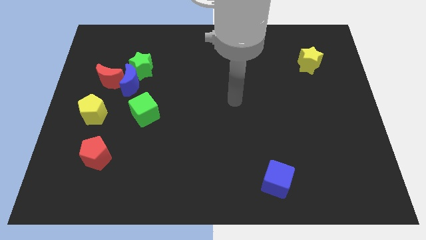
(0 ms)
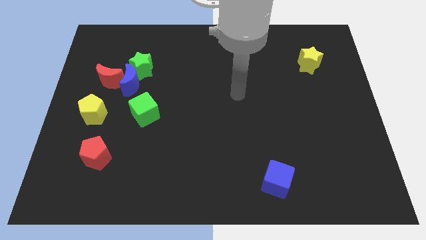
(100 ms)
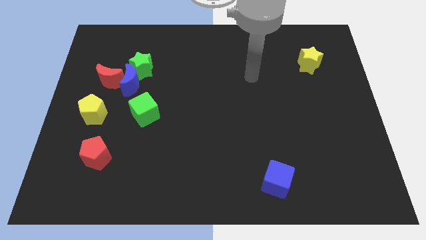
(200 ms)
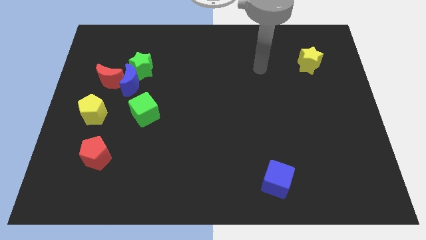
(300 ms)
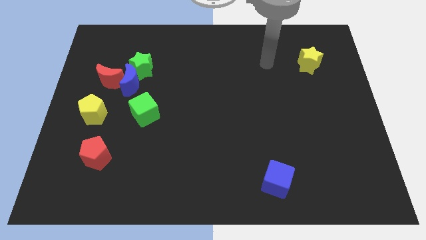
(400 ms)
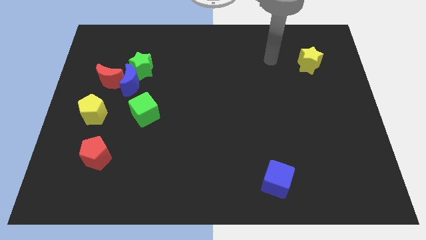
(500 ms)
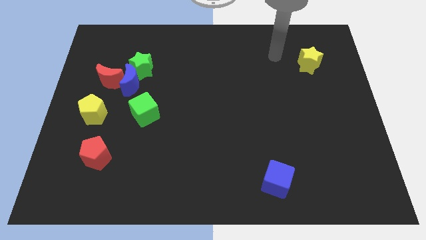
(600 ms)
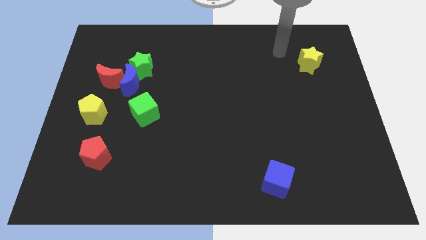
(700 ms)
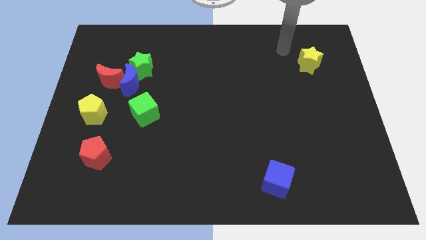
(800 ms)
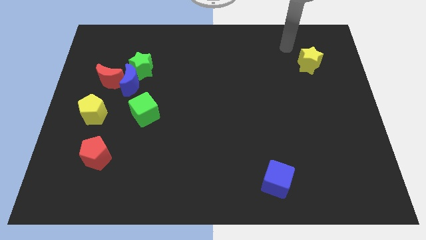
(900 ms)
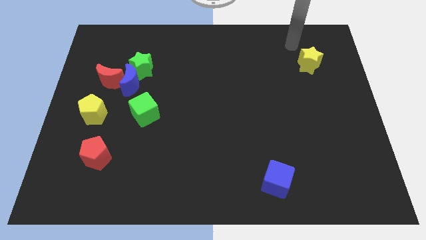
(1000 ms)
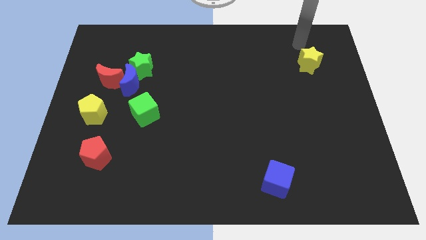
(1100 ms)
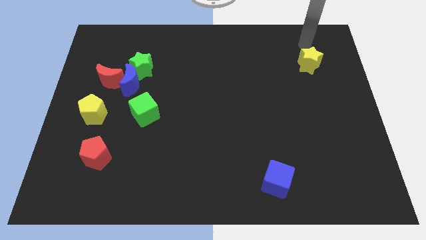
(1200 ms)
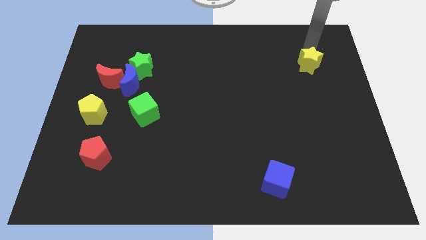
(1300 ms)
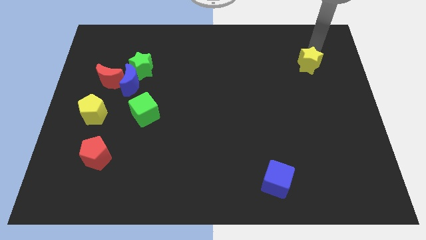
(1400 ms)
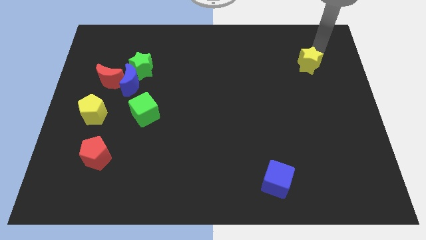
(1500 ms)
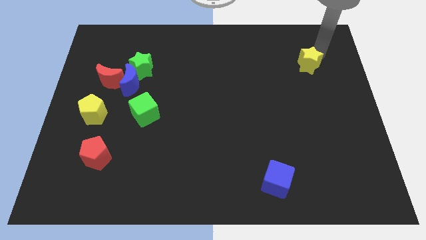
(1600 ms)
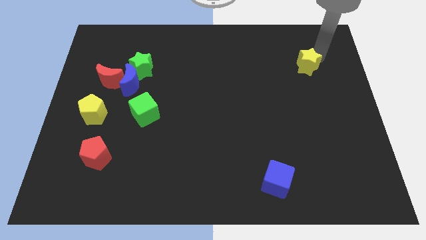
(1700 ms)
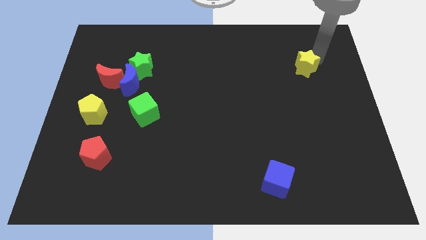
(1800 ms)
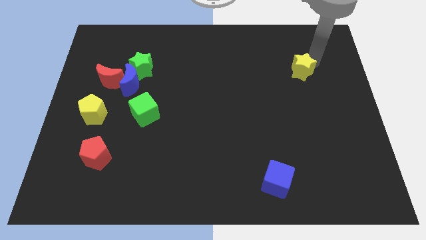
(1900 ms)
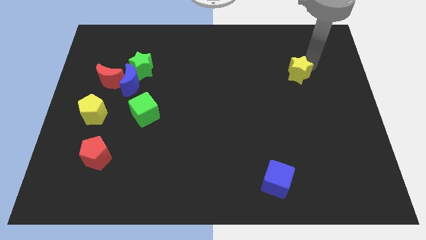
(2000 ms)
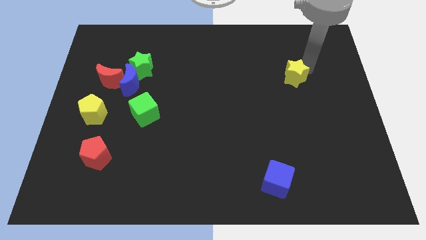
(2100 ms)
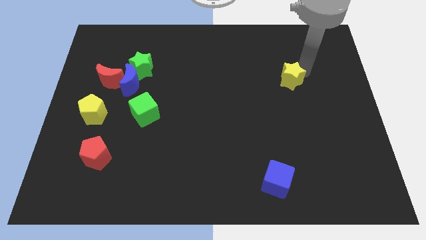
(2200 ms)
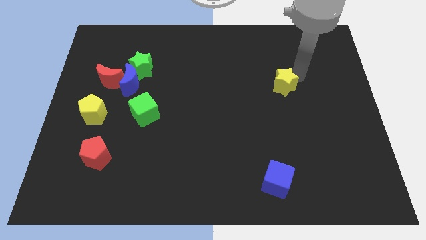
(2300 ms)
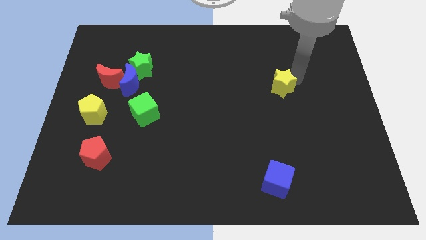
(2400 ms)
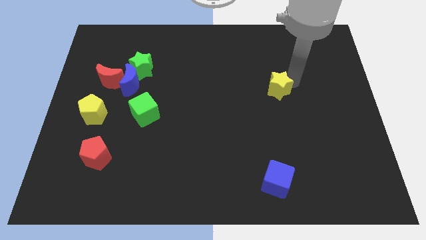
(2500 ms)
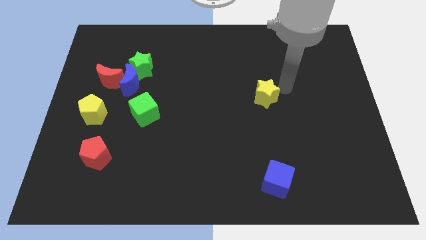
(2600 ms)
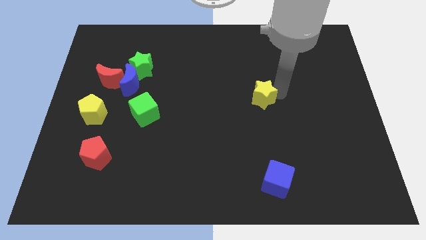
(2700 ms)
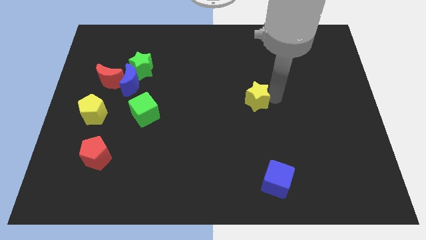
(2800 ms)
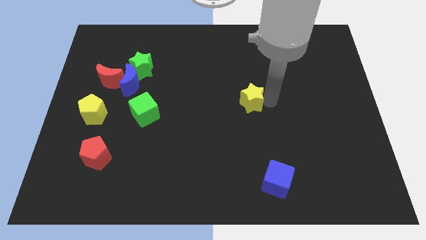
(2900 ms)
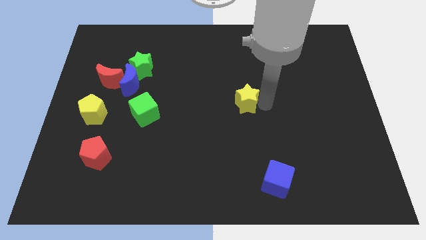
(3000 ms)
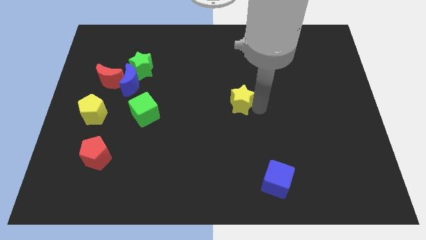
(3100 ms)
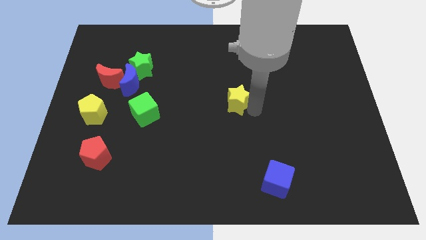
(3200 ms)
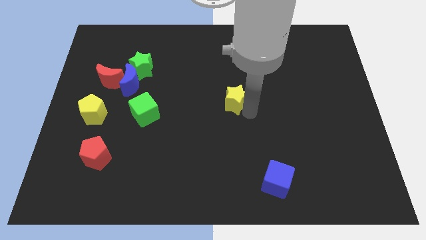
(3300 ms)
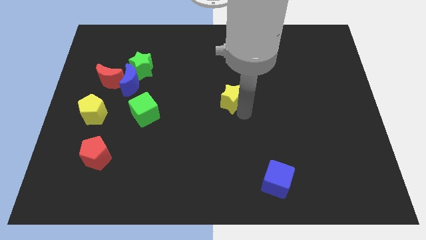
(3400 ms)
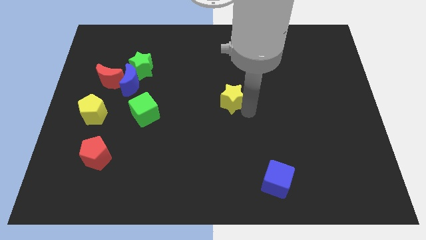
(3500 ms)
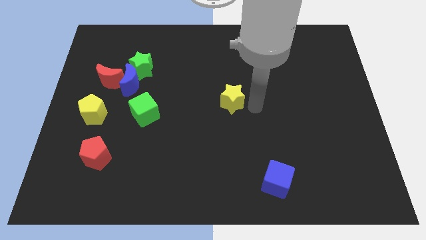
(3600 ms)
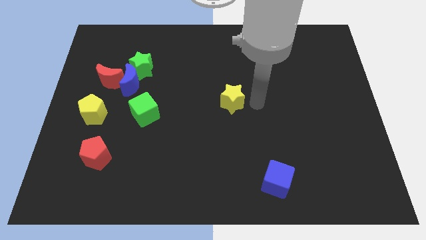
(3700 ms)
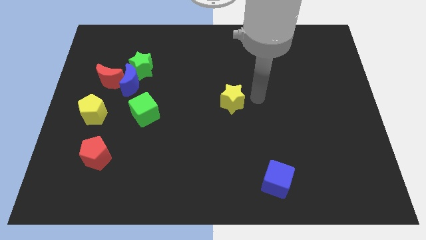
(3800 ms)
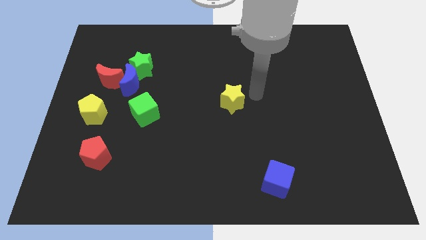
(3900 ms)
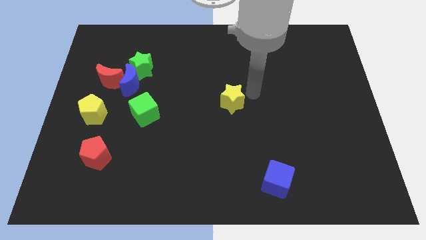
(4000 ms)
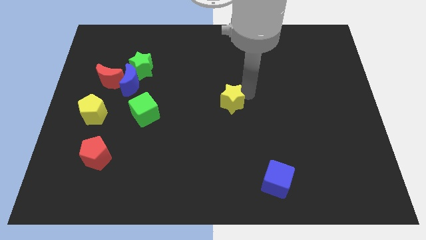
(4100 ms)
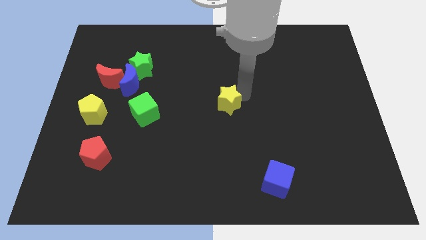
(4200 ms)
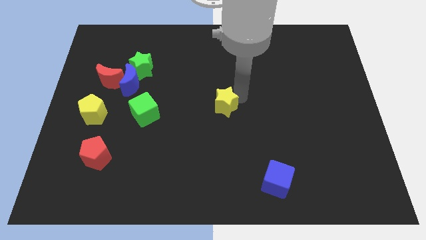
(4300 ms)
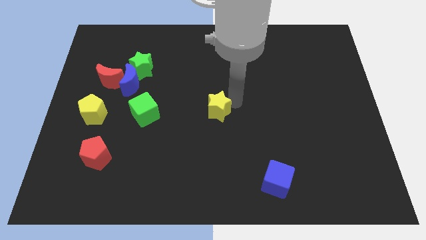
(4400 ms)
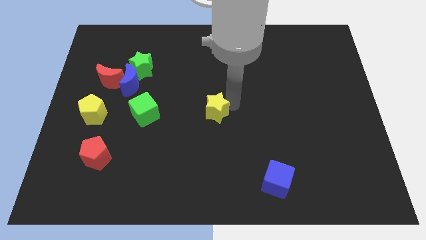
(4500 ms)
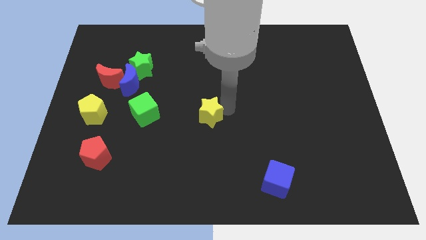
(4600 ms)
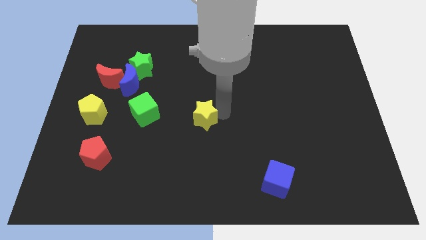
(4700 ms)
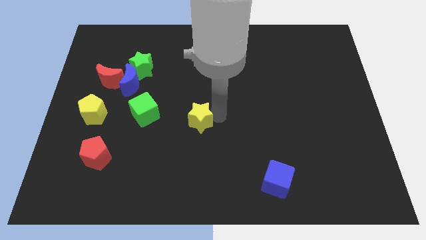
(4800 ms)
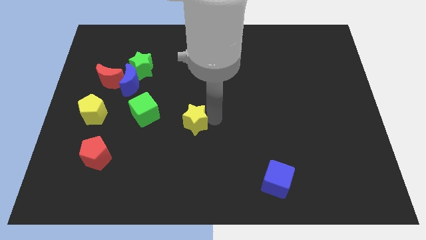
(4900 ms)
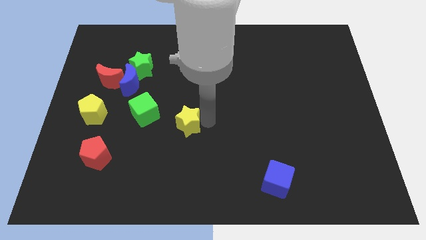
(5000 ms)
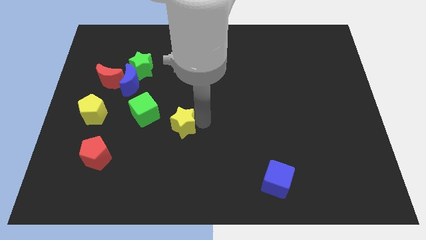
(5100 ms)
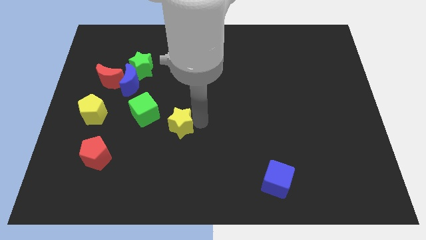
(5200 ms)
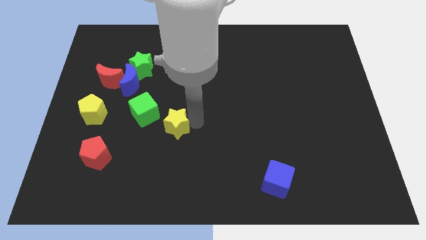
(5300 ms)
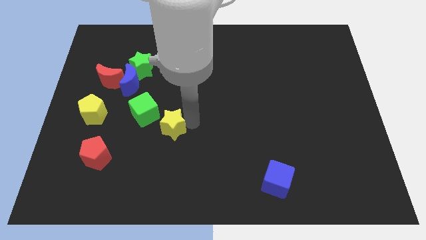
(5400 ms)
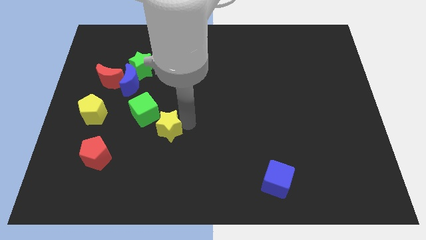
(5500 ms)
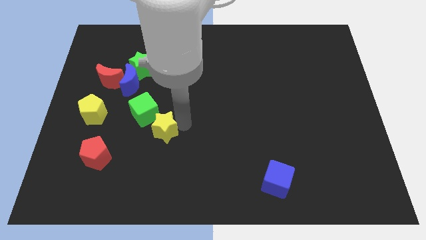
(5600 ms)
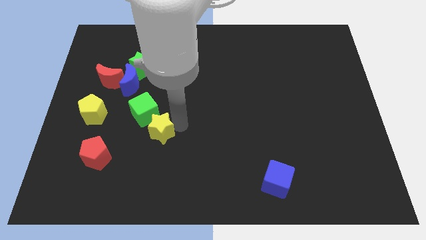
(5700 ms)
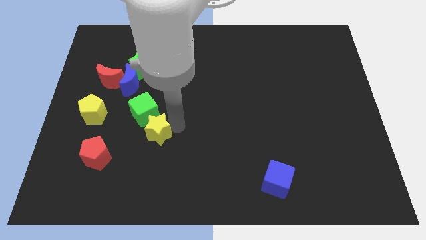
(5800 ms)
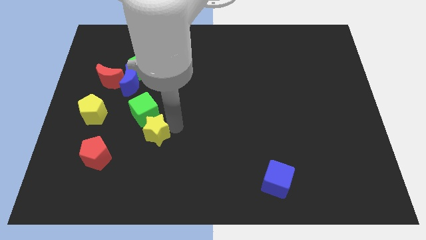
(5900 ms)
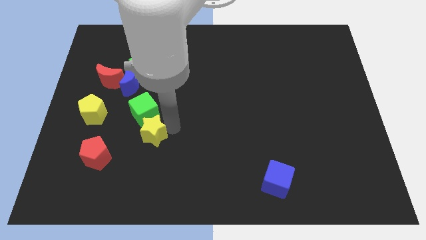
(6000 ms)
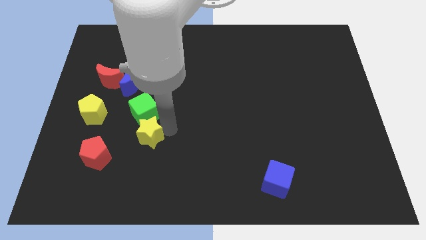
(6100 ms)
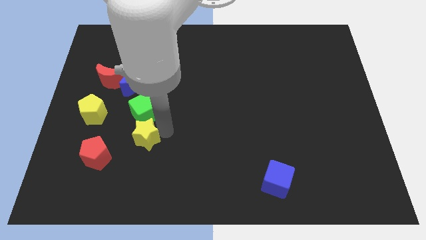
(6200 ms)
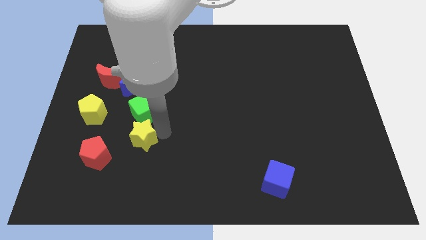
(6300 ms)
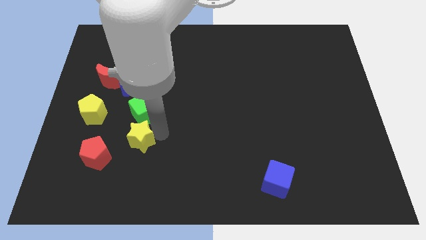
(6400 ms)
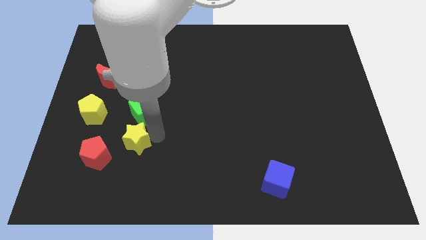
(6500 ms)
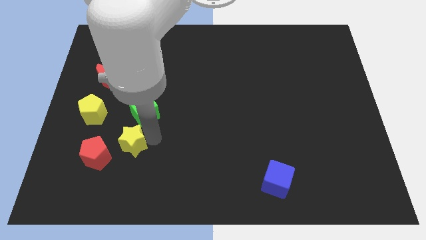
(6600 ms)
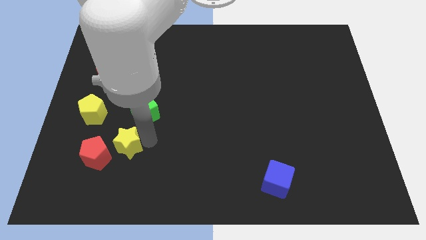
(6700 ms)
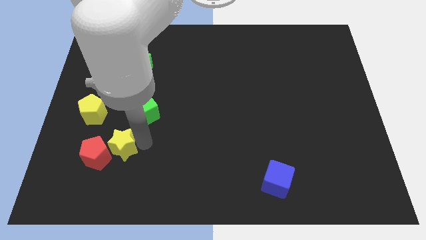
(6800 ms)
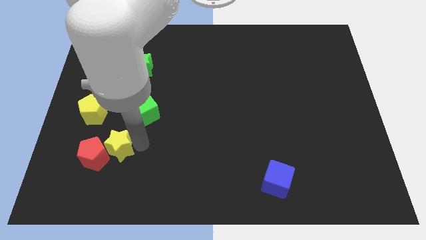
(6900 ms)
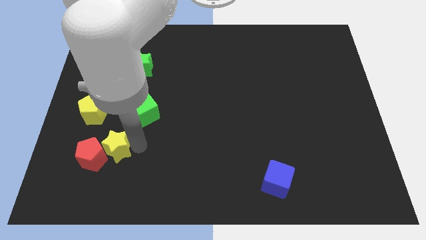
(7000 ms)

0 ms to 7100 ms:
put the yellow star next to the red pentagon

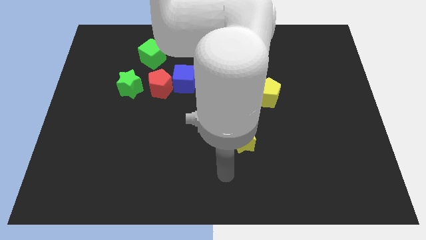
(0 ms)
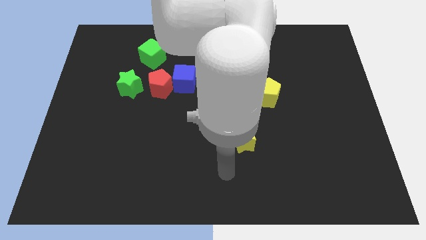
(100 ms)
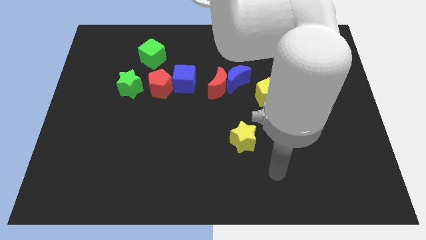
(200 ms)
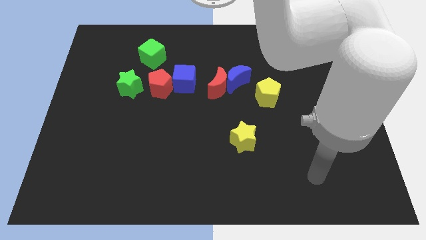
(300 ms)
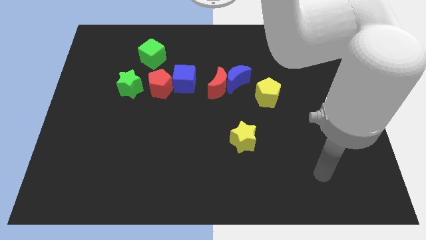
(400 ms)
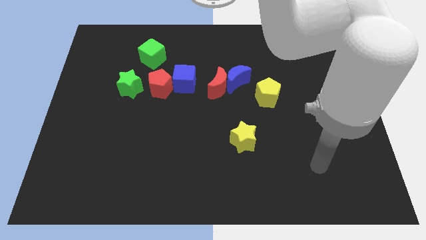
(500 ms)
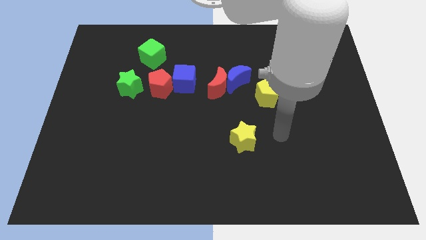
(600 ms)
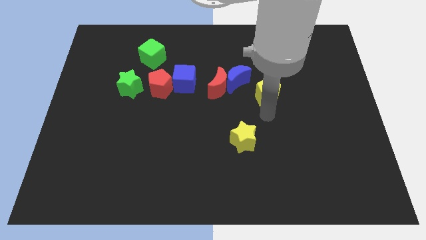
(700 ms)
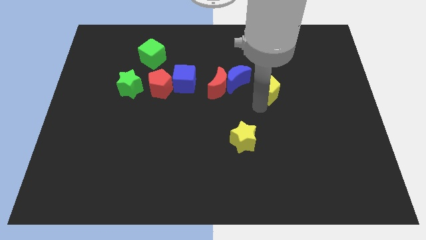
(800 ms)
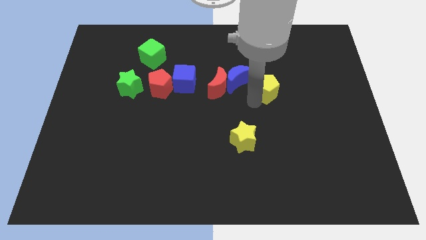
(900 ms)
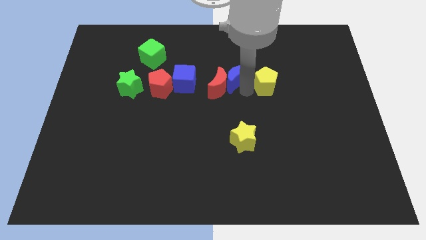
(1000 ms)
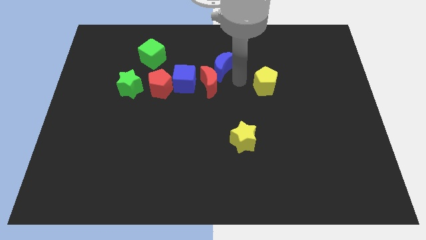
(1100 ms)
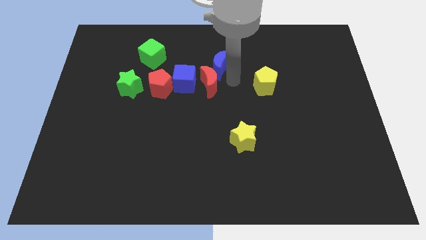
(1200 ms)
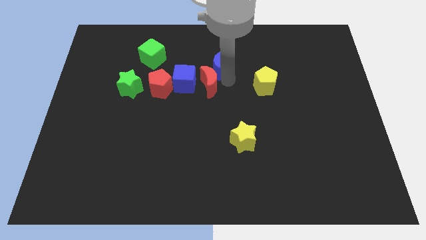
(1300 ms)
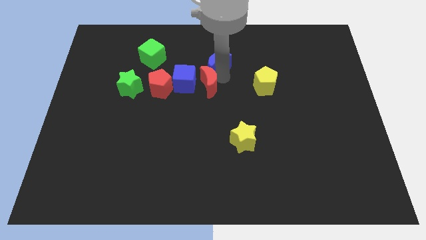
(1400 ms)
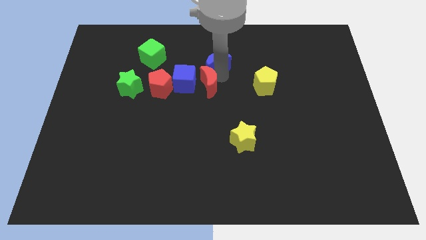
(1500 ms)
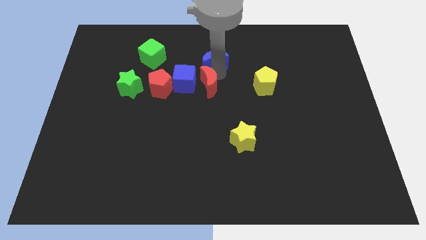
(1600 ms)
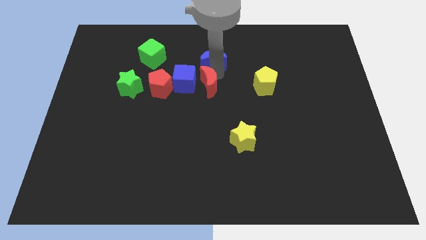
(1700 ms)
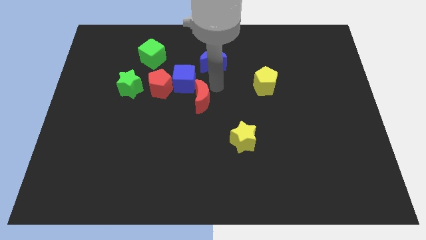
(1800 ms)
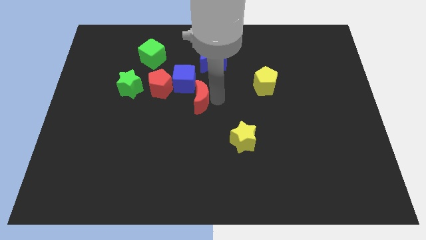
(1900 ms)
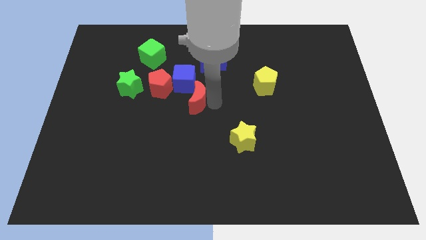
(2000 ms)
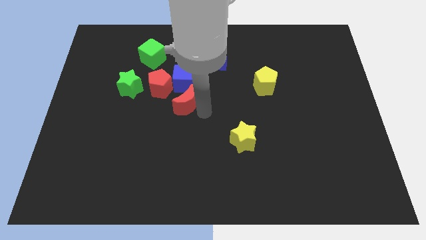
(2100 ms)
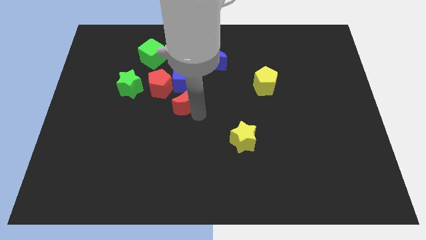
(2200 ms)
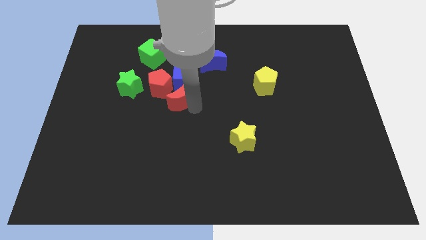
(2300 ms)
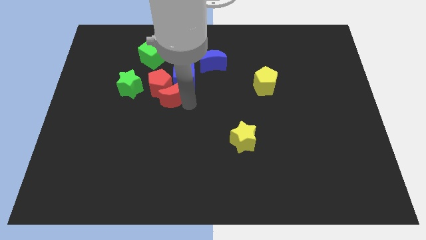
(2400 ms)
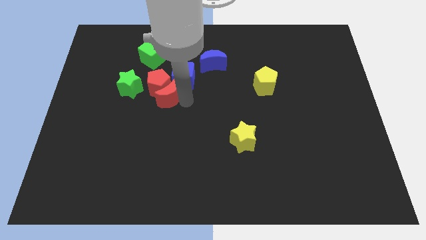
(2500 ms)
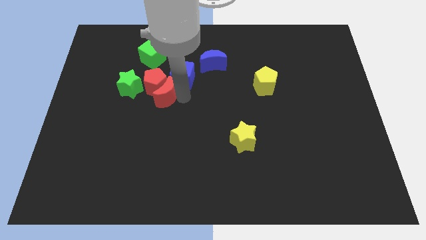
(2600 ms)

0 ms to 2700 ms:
put the red moon next to the red pentagon
